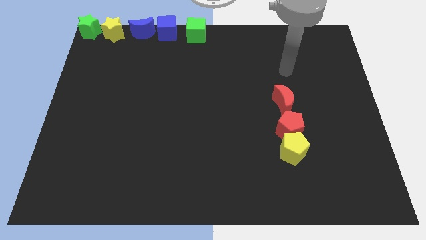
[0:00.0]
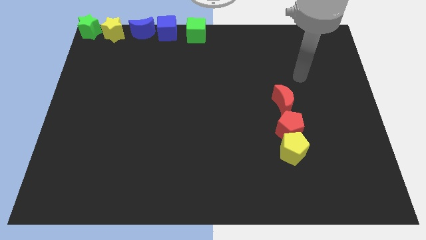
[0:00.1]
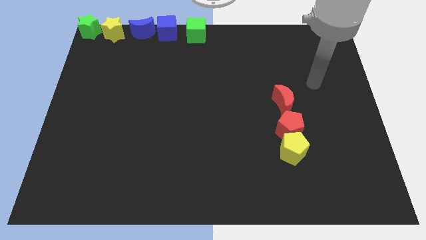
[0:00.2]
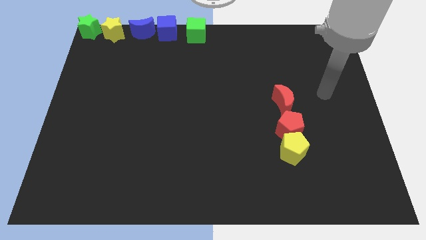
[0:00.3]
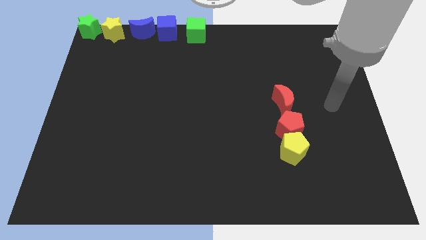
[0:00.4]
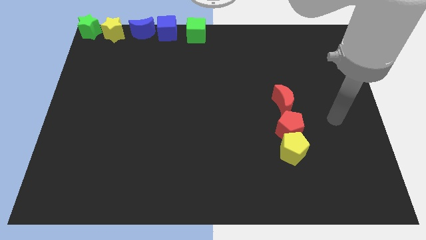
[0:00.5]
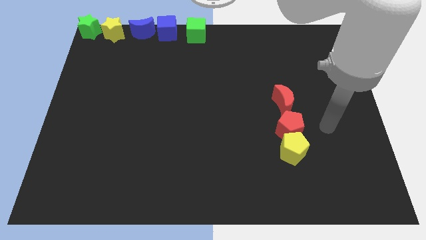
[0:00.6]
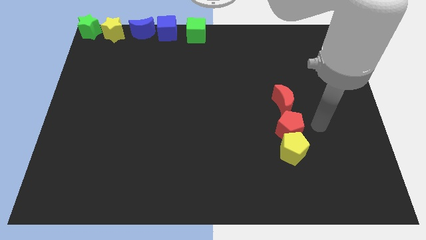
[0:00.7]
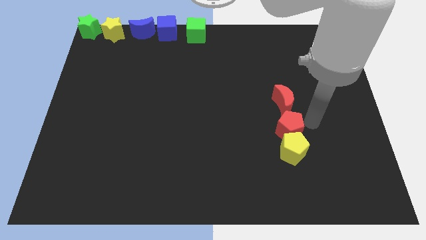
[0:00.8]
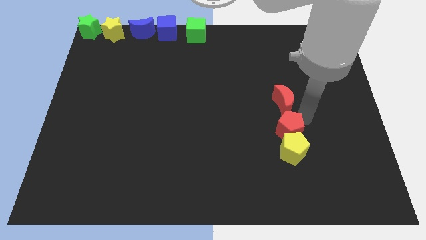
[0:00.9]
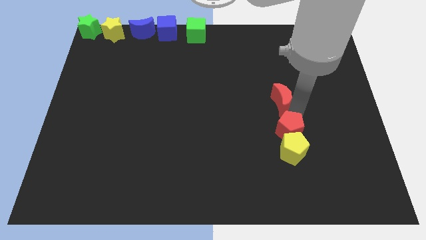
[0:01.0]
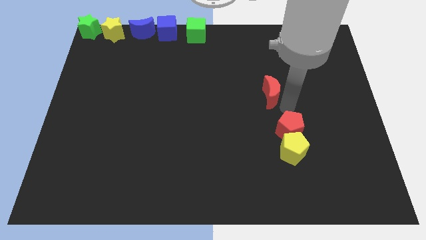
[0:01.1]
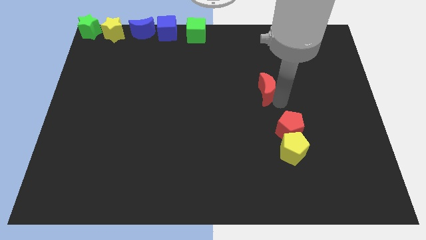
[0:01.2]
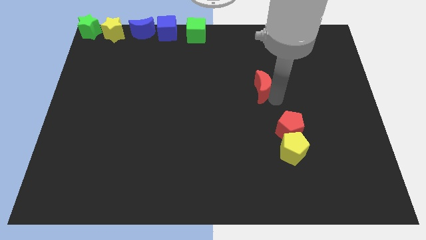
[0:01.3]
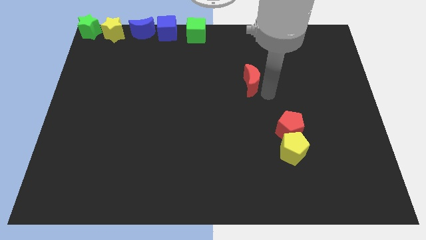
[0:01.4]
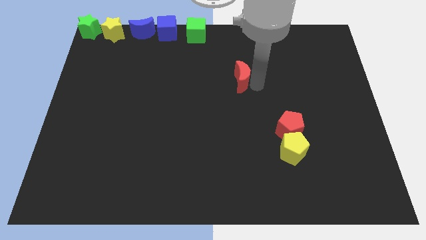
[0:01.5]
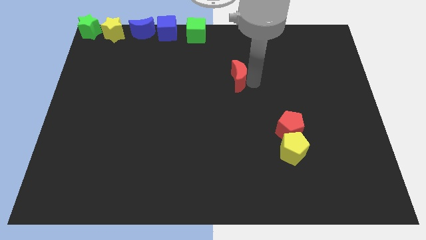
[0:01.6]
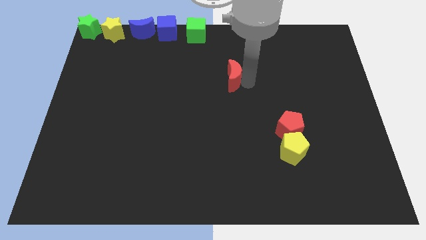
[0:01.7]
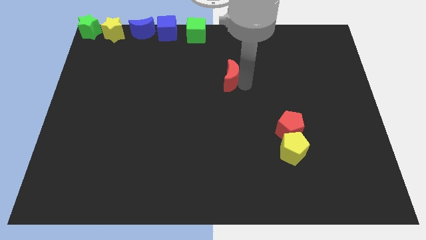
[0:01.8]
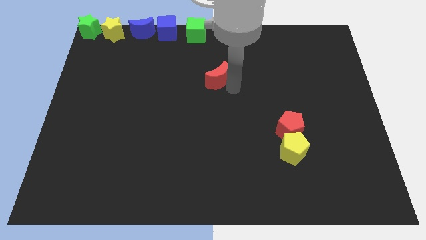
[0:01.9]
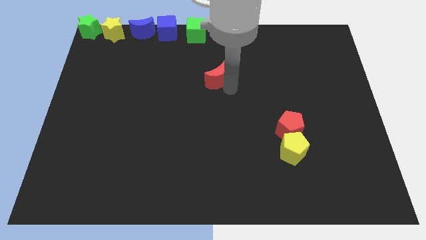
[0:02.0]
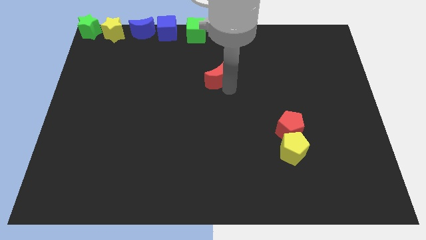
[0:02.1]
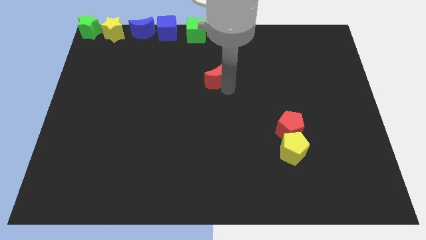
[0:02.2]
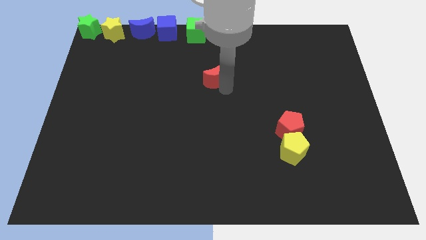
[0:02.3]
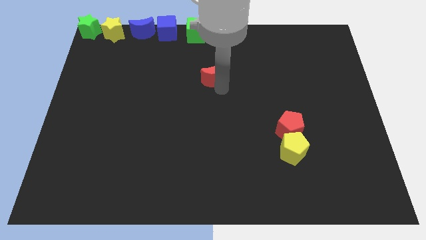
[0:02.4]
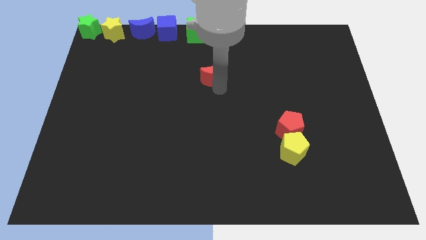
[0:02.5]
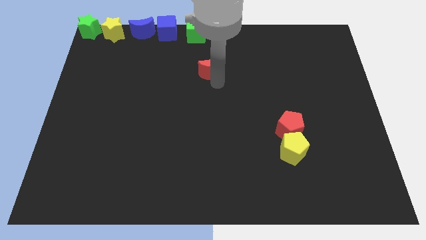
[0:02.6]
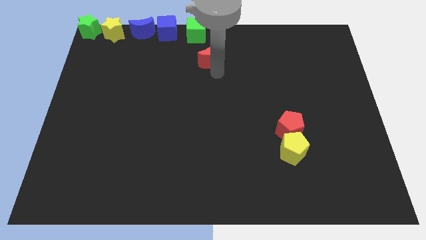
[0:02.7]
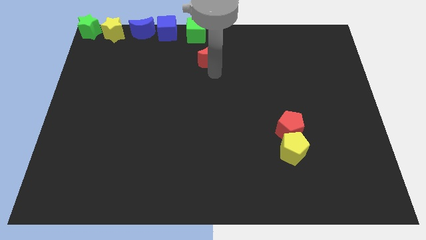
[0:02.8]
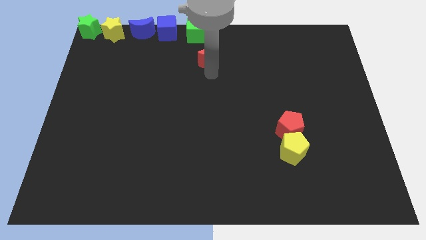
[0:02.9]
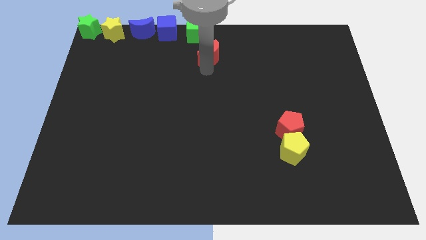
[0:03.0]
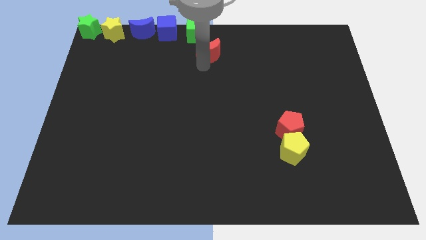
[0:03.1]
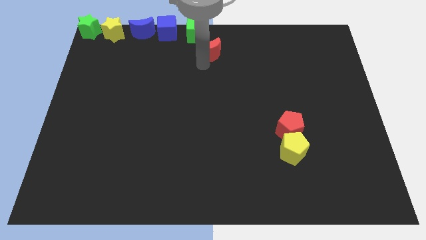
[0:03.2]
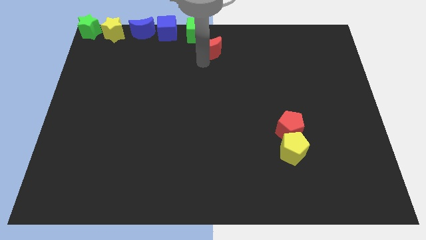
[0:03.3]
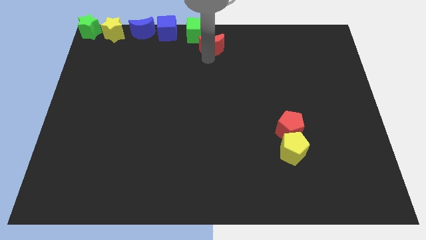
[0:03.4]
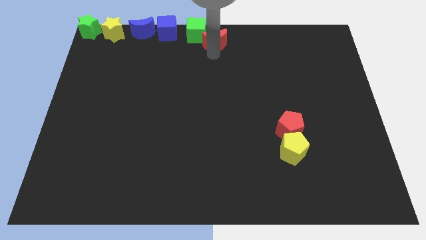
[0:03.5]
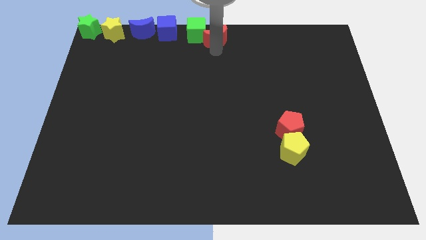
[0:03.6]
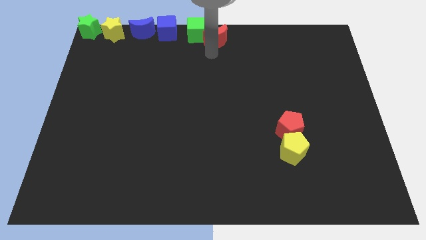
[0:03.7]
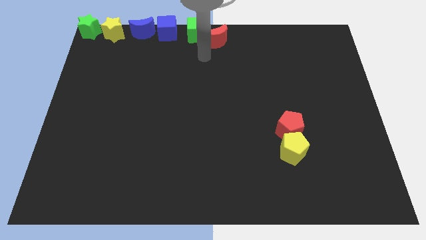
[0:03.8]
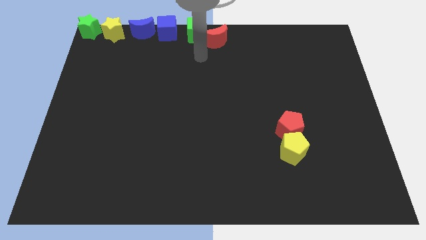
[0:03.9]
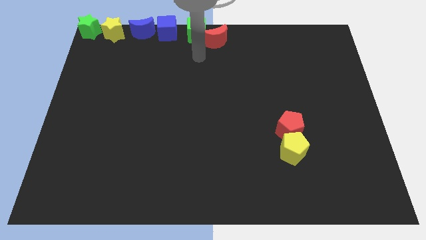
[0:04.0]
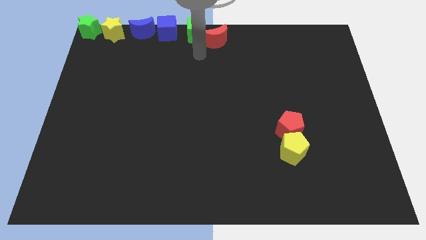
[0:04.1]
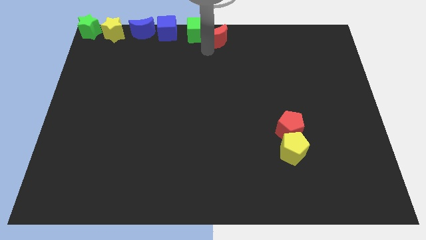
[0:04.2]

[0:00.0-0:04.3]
move the red moon into green cube

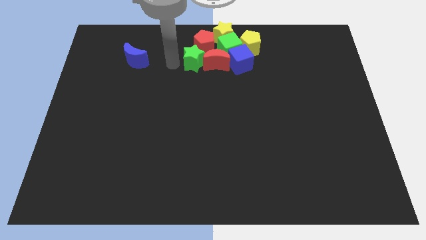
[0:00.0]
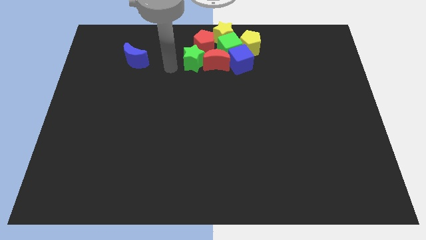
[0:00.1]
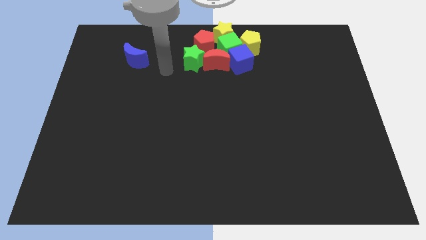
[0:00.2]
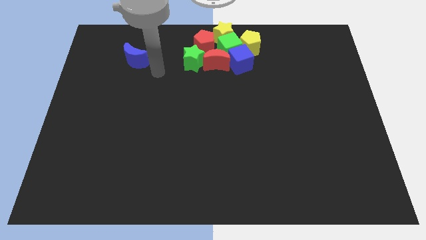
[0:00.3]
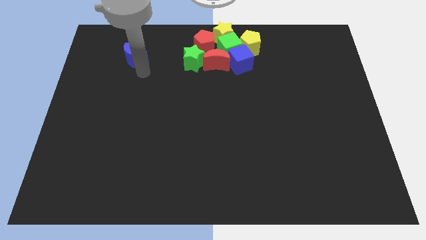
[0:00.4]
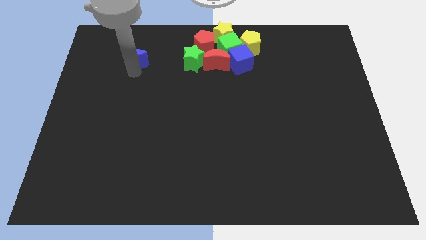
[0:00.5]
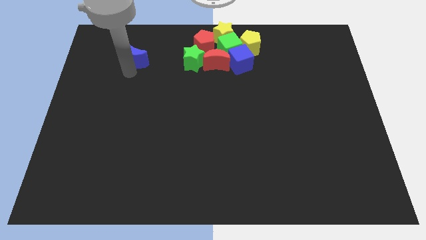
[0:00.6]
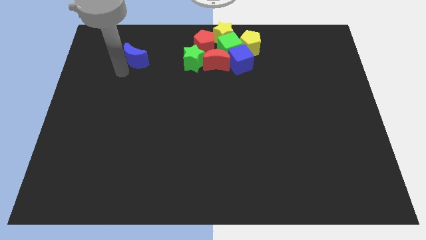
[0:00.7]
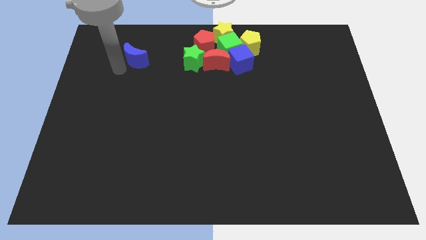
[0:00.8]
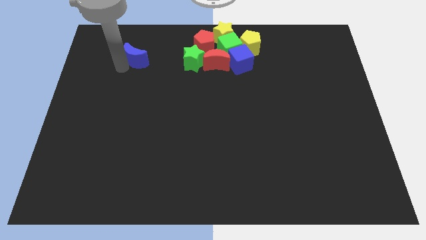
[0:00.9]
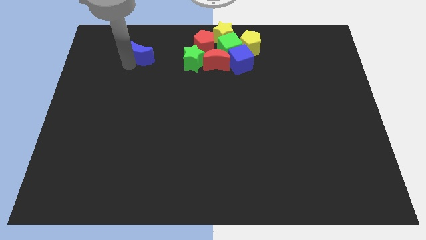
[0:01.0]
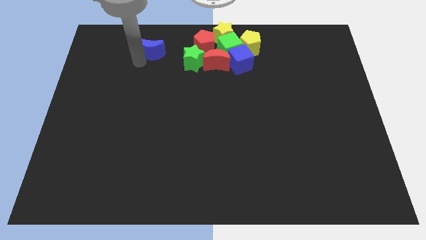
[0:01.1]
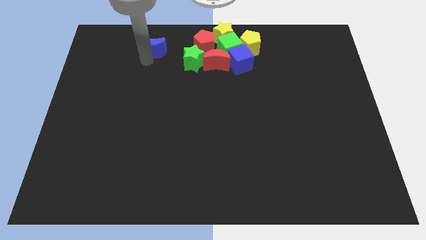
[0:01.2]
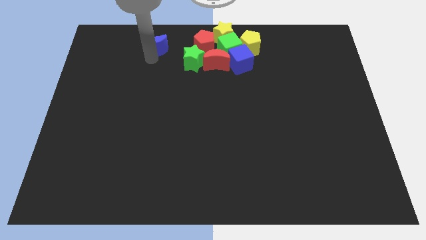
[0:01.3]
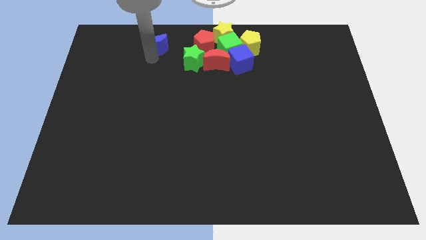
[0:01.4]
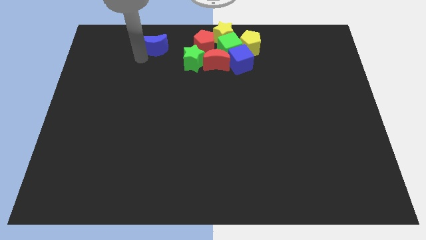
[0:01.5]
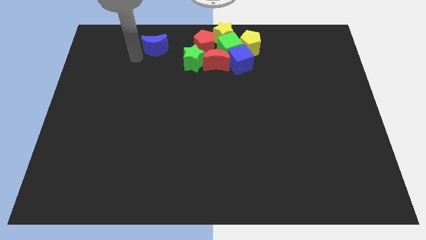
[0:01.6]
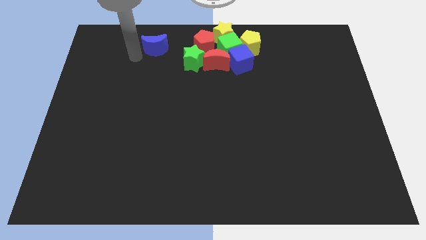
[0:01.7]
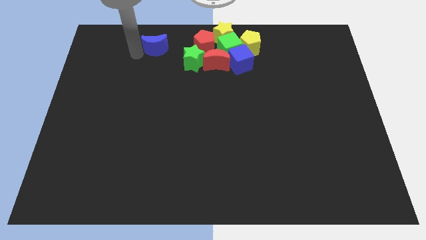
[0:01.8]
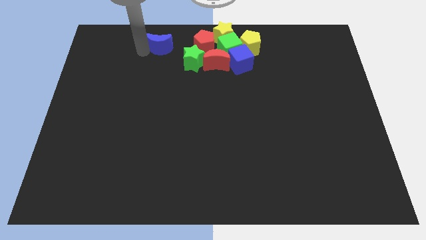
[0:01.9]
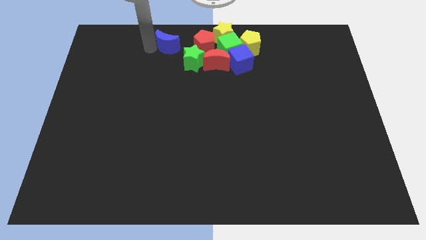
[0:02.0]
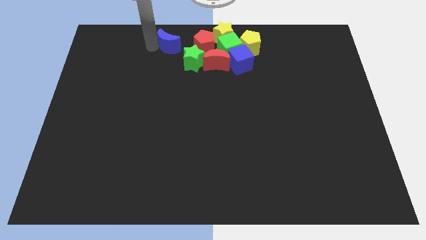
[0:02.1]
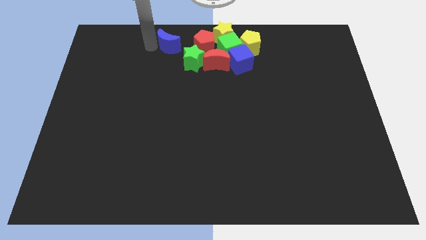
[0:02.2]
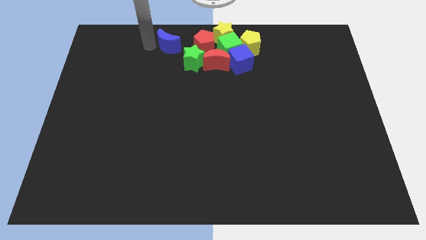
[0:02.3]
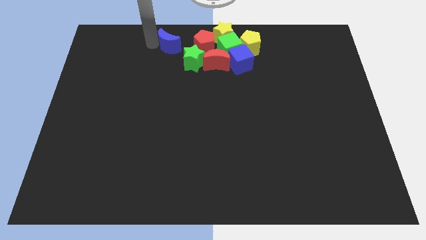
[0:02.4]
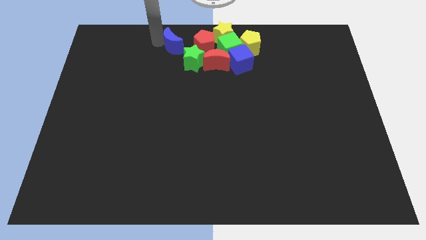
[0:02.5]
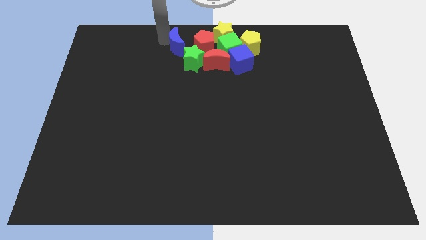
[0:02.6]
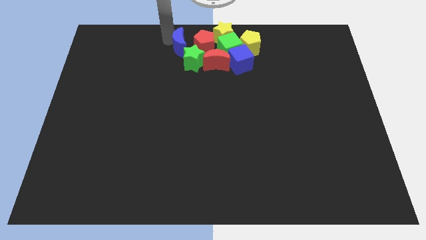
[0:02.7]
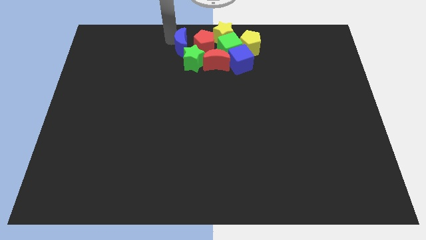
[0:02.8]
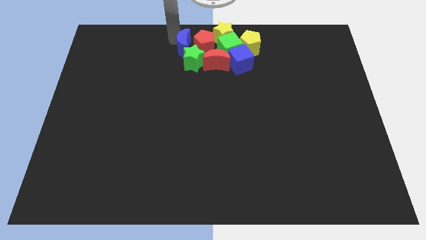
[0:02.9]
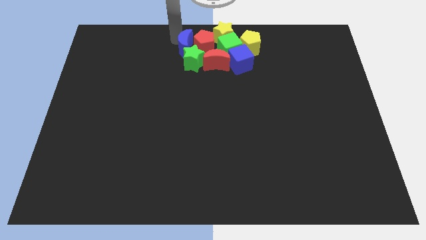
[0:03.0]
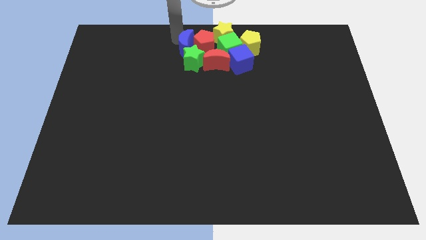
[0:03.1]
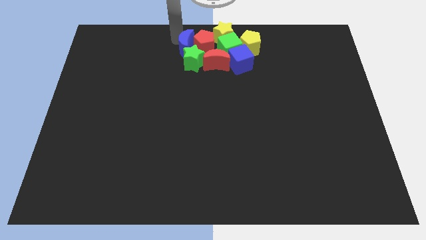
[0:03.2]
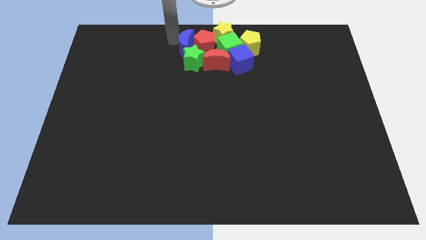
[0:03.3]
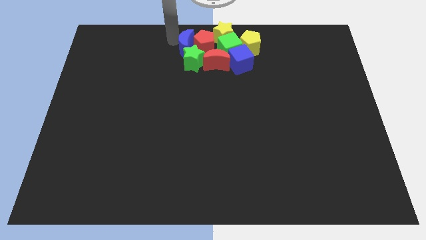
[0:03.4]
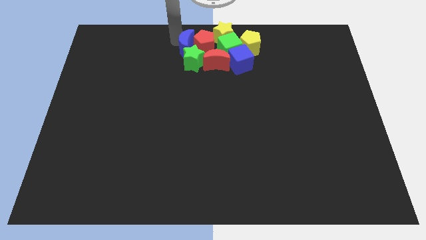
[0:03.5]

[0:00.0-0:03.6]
push the blue moon to the top side of the green star

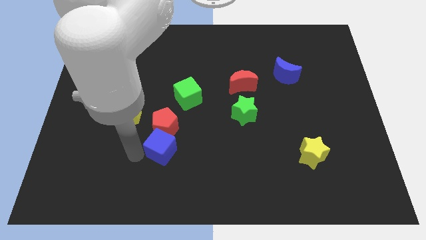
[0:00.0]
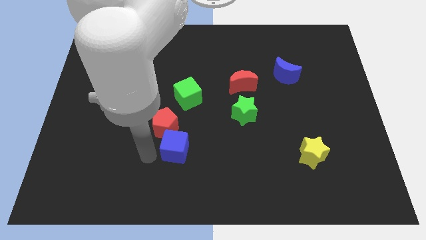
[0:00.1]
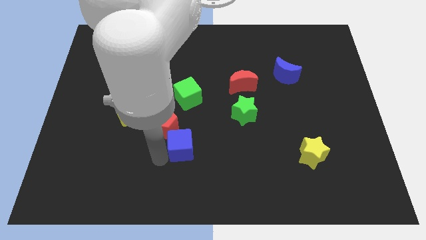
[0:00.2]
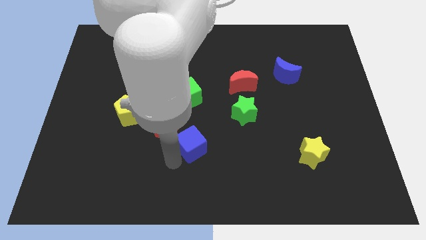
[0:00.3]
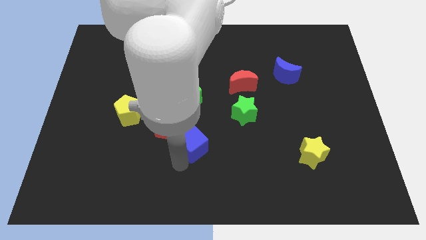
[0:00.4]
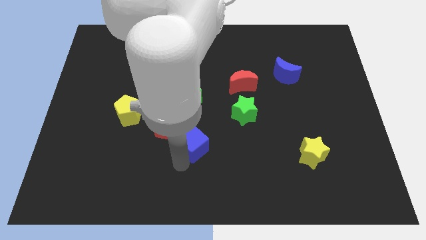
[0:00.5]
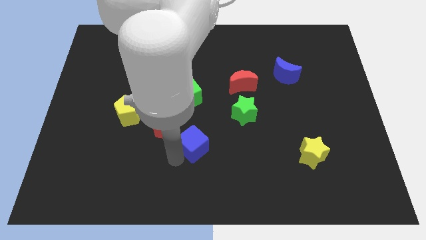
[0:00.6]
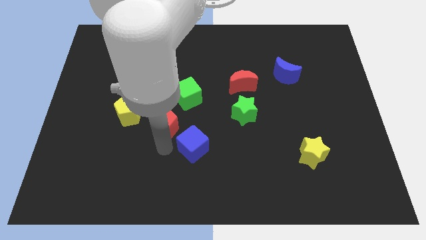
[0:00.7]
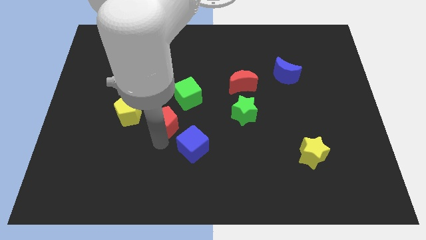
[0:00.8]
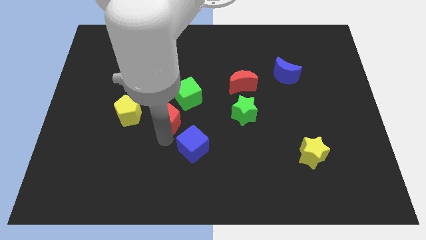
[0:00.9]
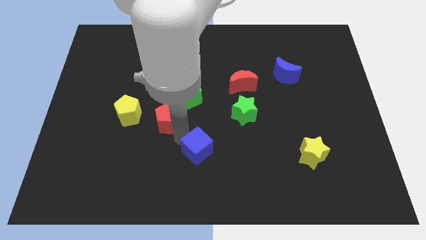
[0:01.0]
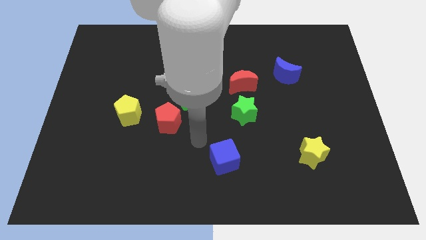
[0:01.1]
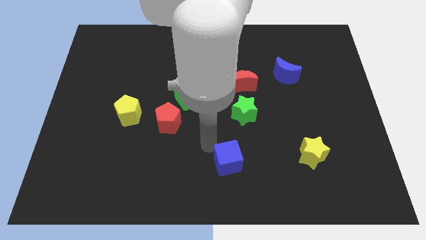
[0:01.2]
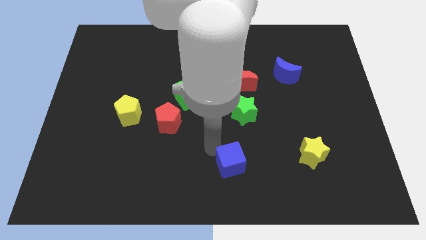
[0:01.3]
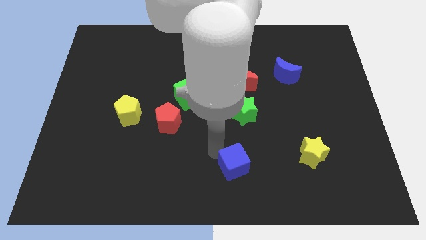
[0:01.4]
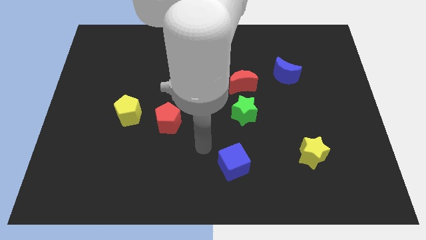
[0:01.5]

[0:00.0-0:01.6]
push the blue cube towards the bottom center of the board
